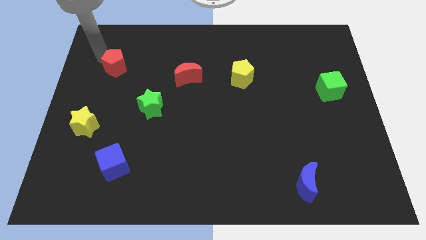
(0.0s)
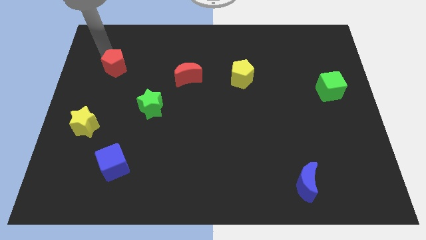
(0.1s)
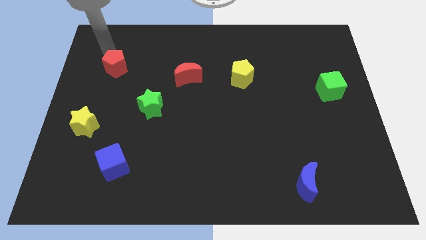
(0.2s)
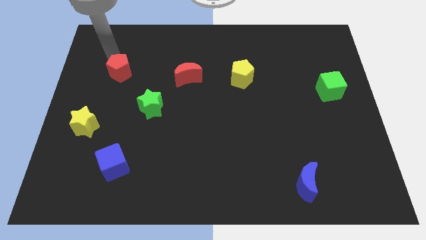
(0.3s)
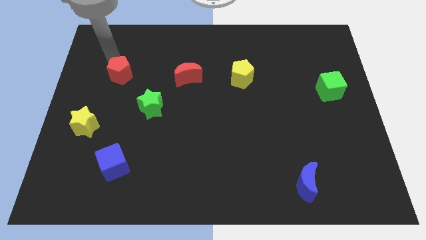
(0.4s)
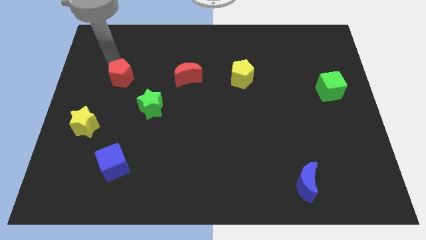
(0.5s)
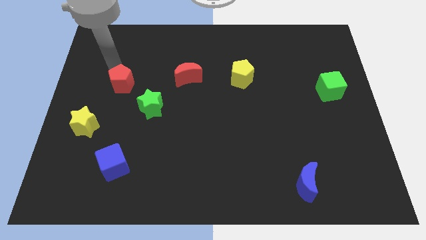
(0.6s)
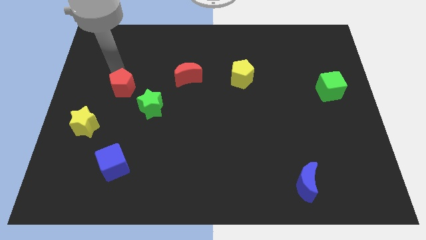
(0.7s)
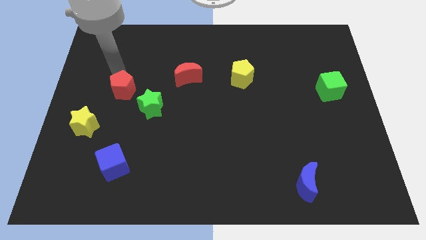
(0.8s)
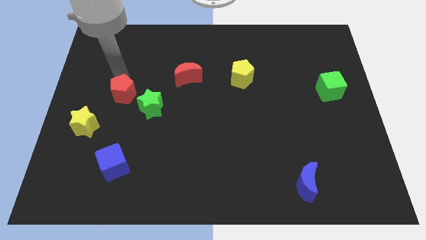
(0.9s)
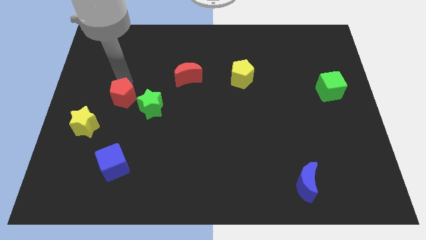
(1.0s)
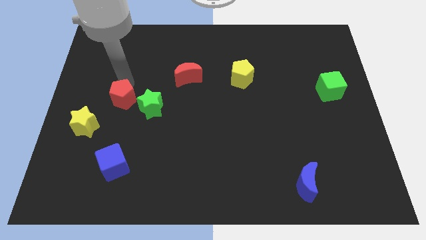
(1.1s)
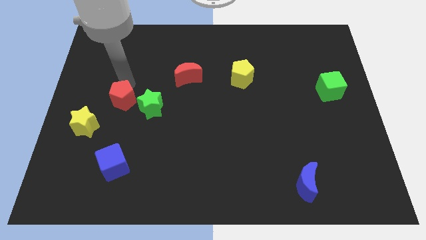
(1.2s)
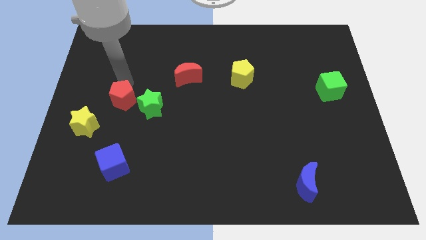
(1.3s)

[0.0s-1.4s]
push the red pentagon towards the green star

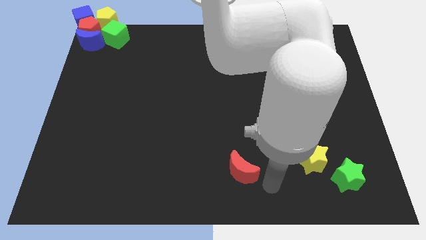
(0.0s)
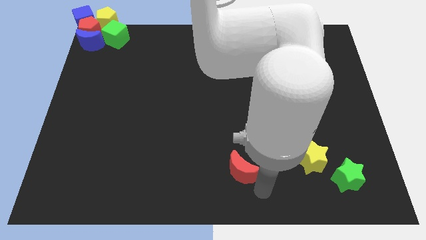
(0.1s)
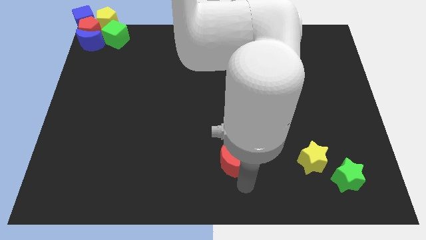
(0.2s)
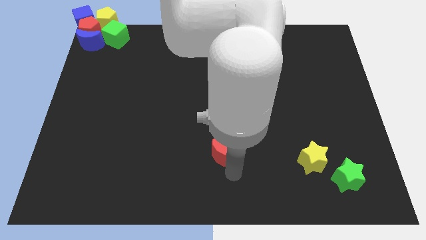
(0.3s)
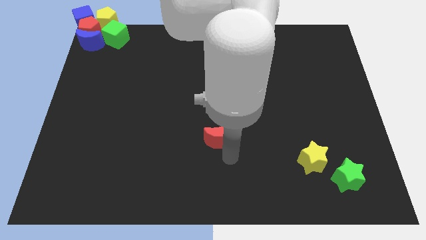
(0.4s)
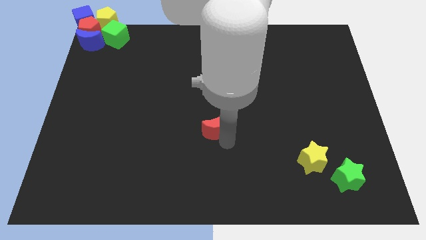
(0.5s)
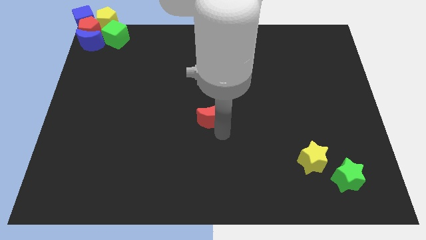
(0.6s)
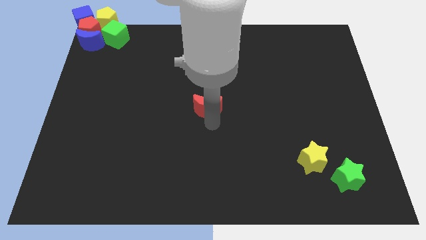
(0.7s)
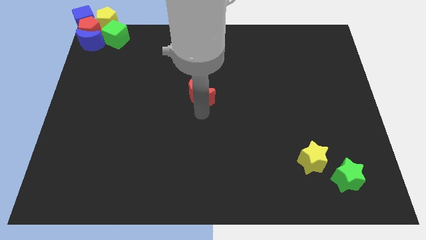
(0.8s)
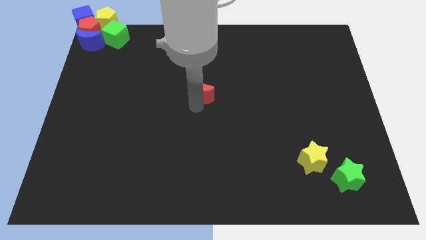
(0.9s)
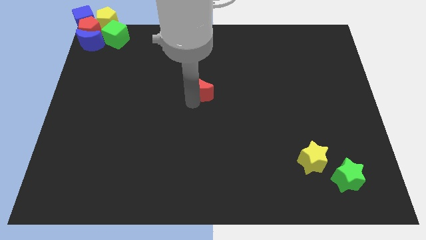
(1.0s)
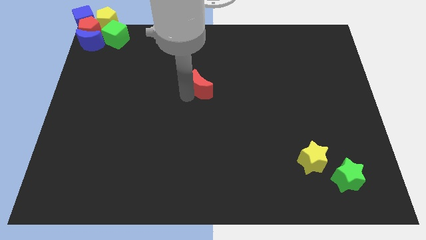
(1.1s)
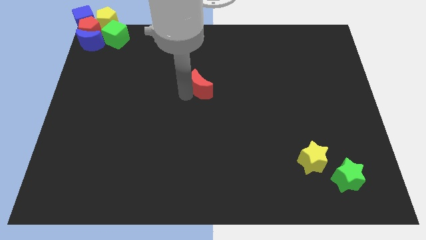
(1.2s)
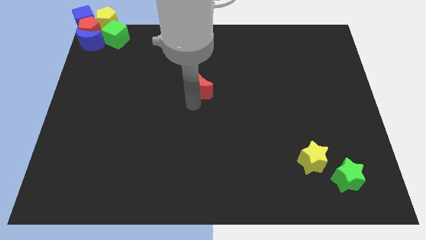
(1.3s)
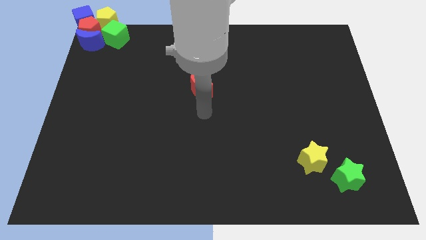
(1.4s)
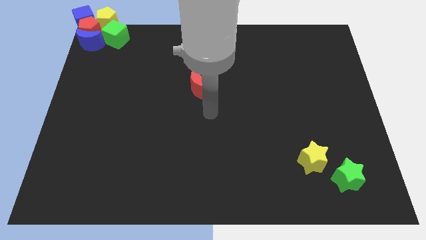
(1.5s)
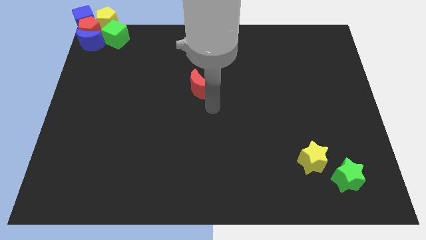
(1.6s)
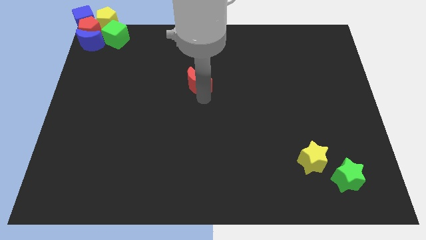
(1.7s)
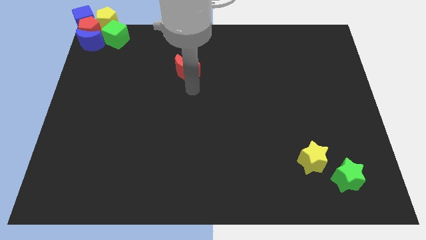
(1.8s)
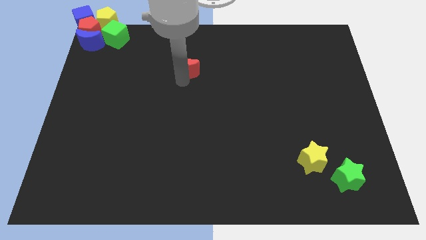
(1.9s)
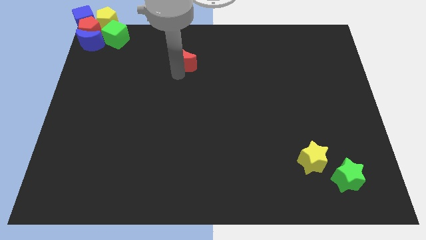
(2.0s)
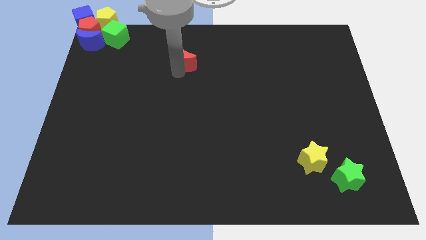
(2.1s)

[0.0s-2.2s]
push the red moon towards the top side of the board

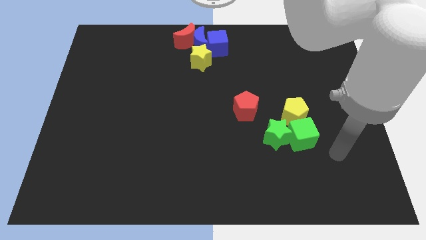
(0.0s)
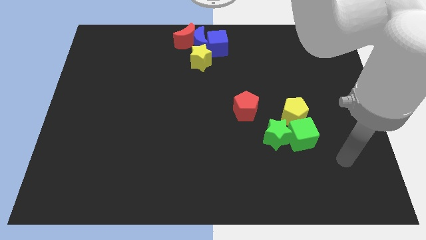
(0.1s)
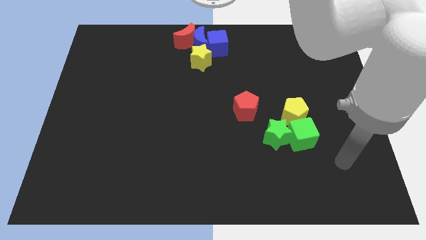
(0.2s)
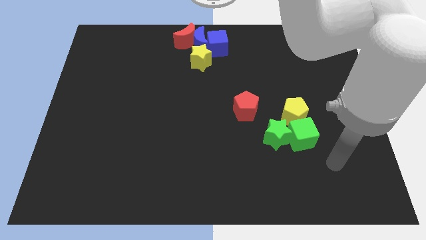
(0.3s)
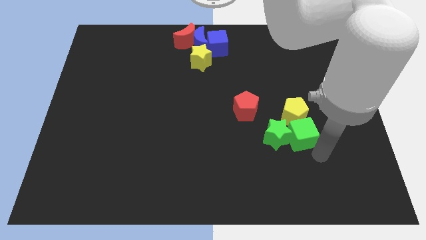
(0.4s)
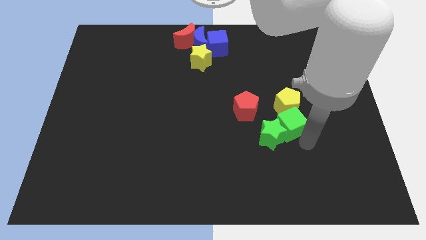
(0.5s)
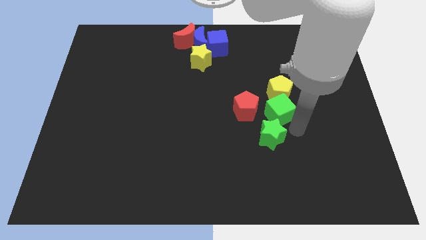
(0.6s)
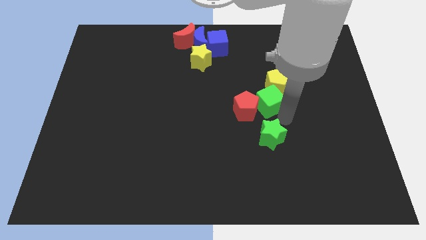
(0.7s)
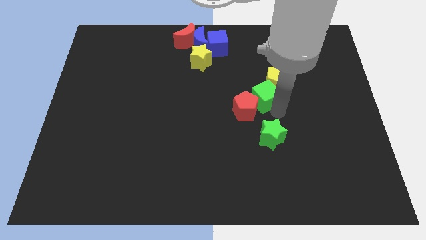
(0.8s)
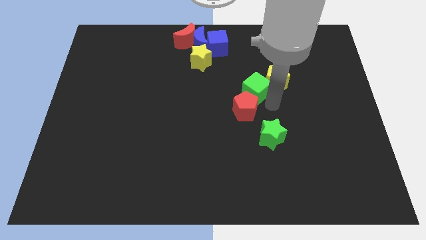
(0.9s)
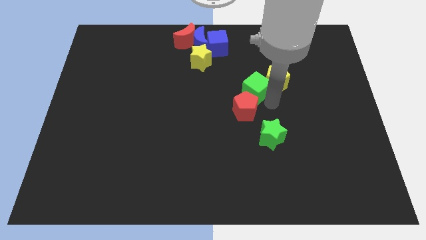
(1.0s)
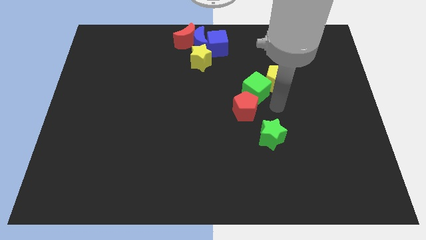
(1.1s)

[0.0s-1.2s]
separate green star and green cube

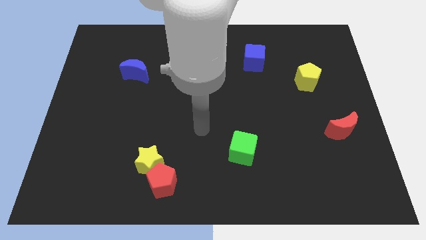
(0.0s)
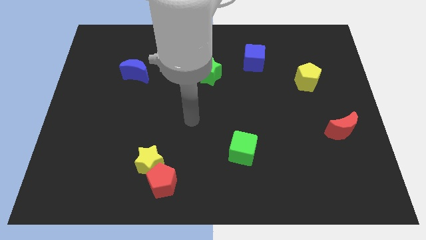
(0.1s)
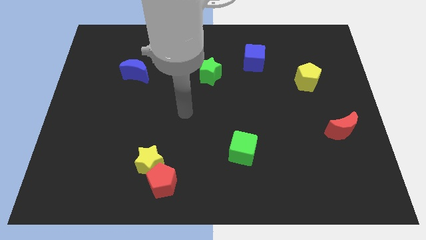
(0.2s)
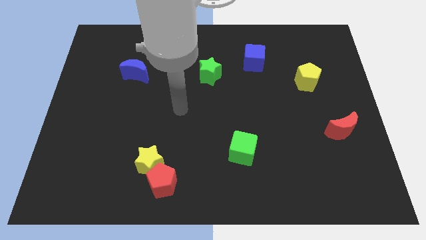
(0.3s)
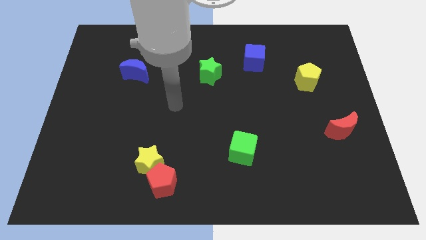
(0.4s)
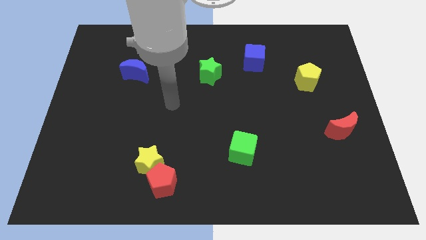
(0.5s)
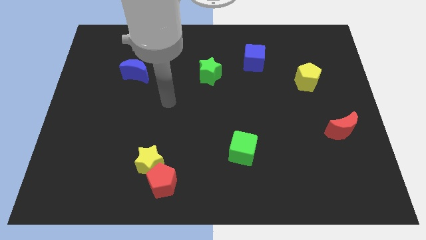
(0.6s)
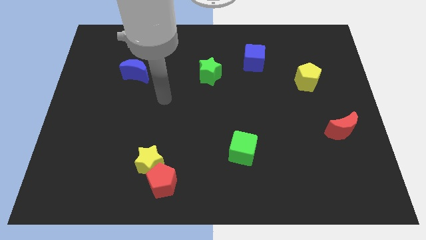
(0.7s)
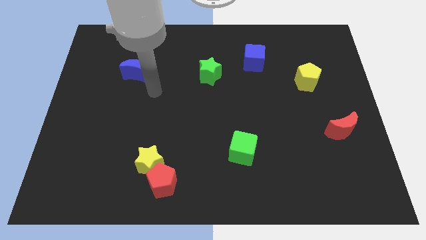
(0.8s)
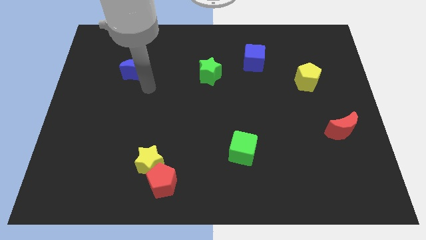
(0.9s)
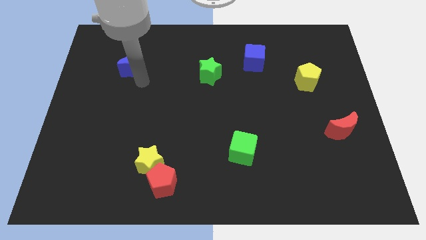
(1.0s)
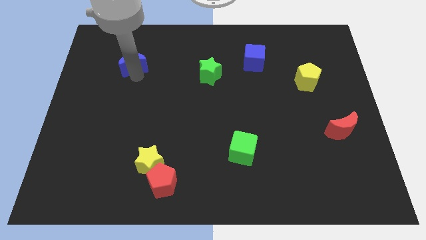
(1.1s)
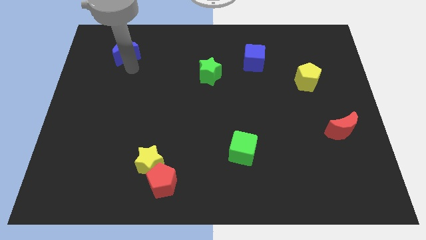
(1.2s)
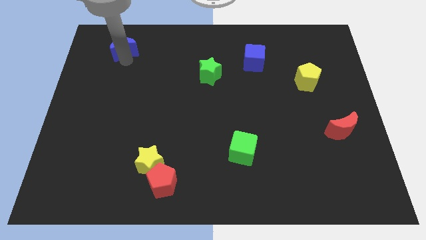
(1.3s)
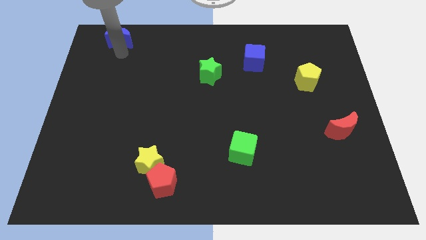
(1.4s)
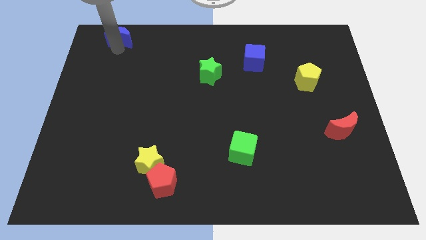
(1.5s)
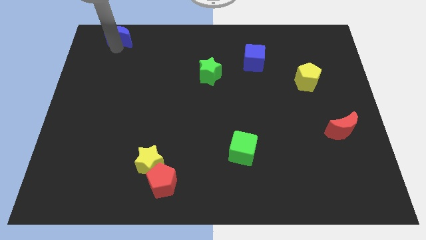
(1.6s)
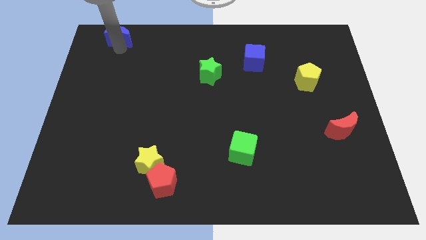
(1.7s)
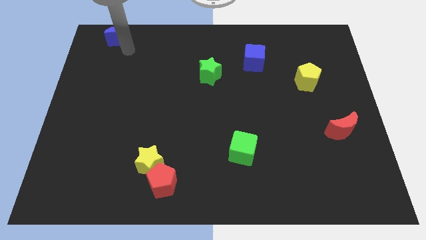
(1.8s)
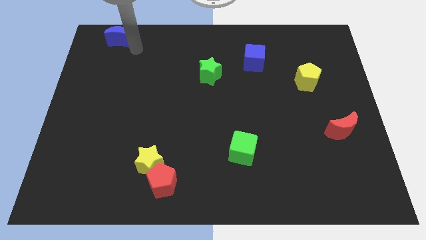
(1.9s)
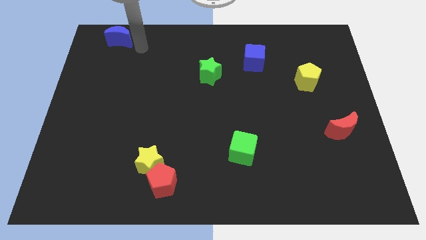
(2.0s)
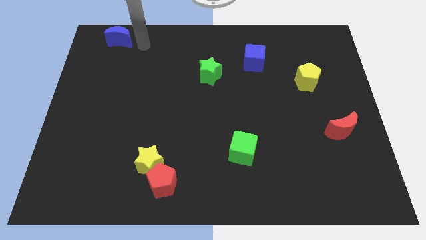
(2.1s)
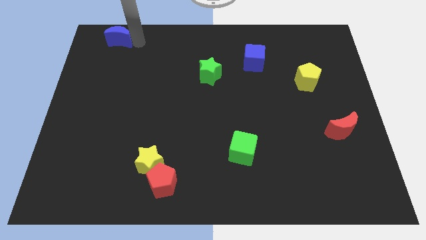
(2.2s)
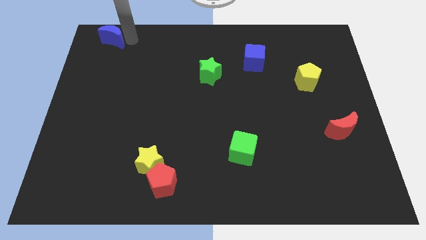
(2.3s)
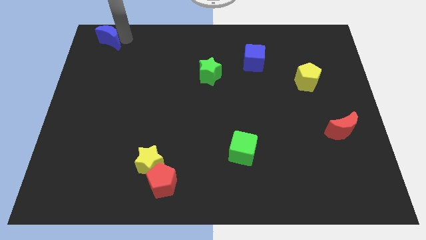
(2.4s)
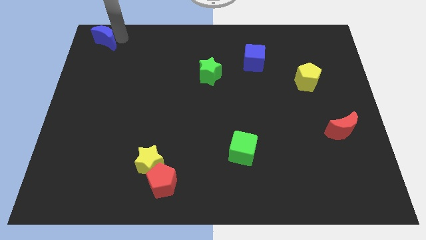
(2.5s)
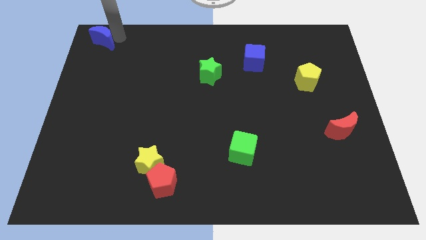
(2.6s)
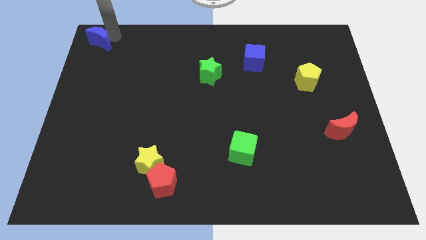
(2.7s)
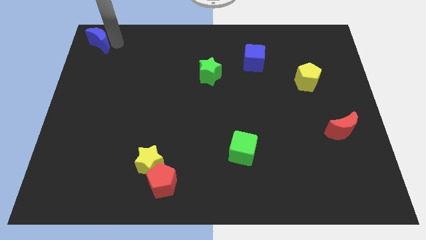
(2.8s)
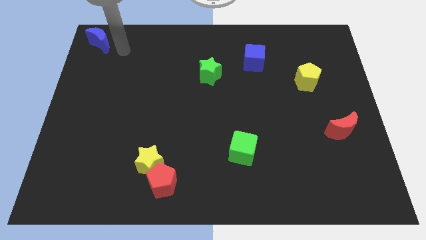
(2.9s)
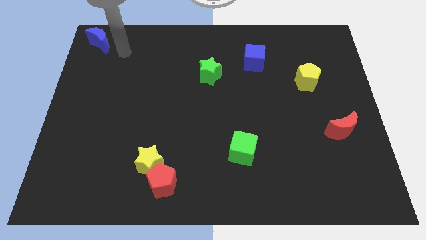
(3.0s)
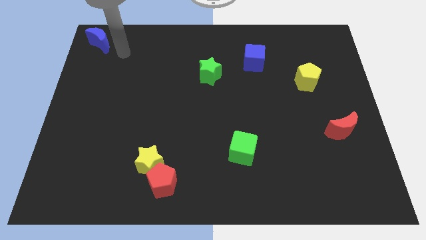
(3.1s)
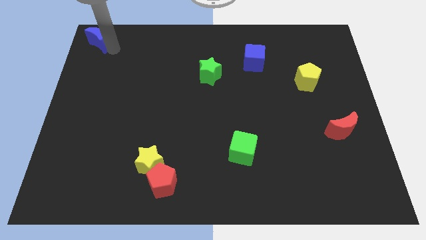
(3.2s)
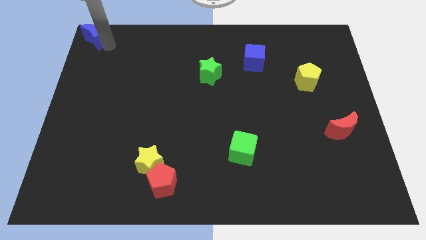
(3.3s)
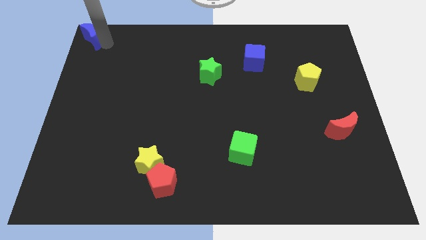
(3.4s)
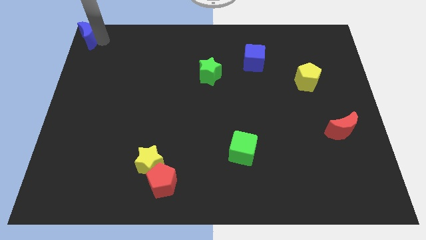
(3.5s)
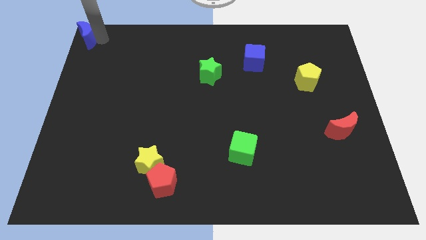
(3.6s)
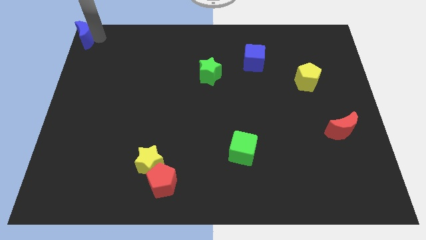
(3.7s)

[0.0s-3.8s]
move the blue crescent to the top left corner of the board

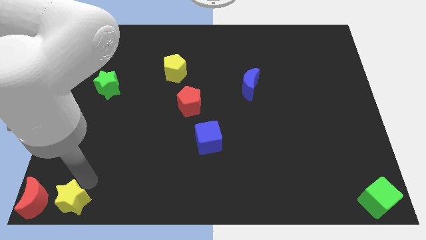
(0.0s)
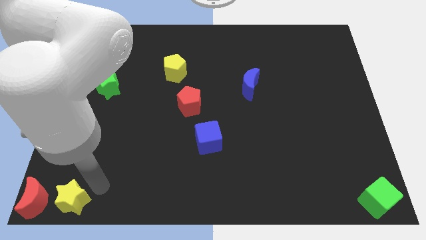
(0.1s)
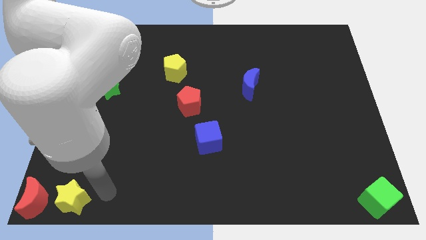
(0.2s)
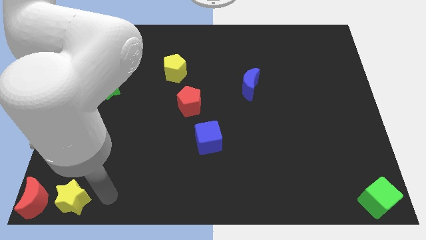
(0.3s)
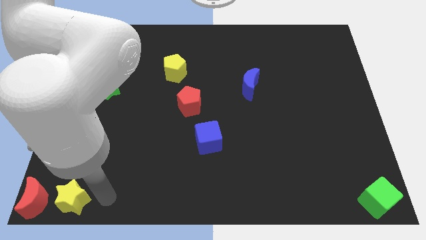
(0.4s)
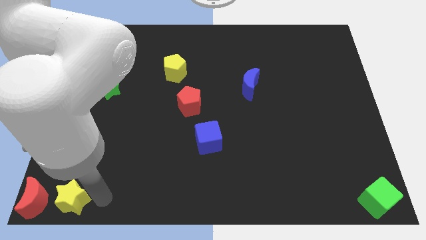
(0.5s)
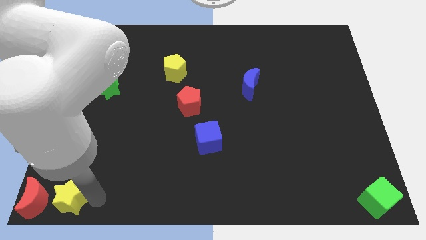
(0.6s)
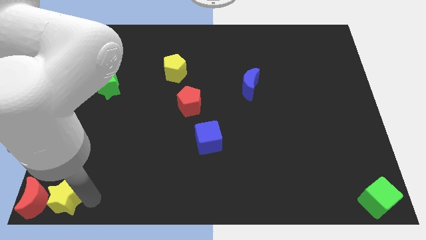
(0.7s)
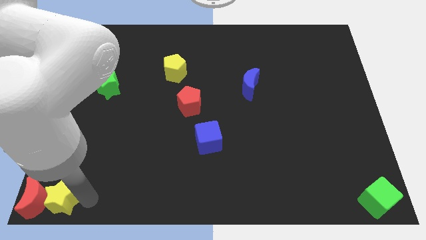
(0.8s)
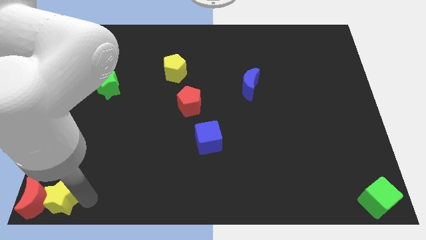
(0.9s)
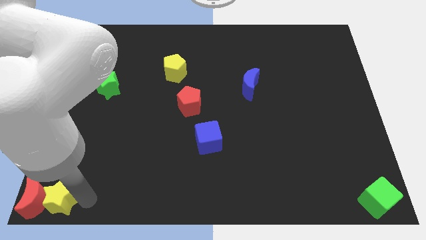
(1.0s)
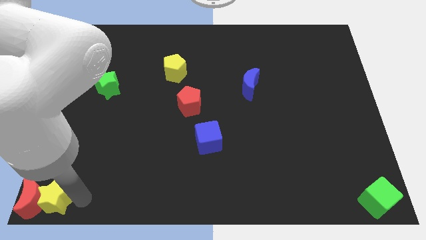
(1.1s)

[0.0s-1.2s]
push the yellow star slightly parallel to the red crescent at the left bottom corner of the board
